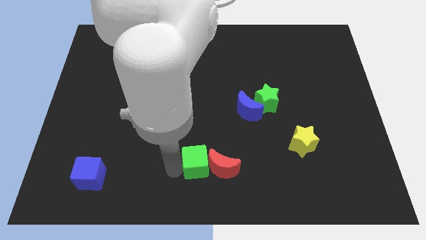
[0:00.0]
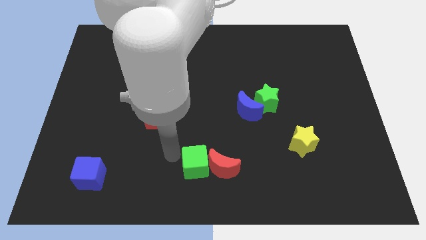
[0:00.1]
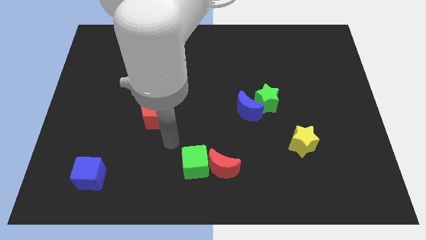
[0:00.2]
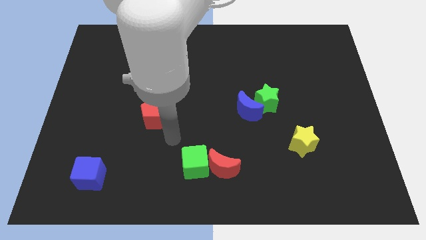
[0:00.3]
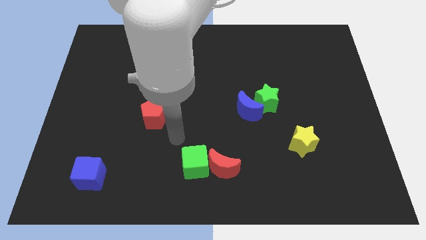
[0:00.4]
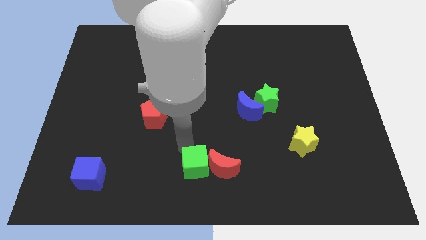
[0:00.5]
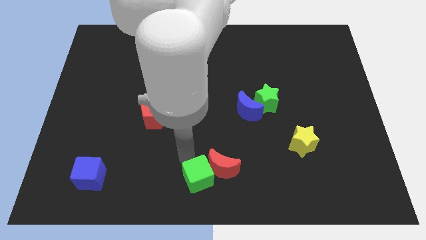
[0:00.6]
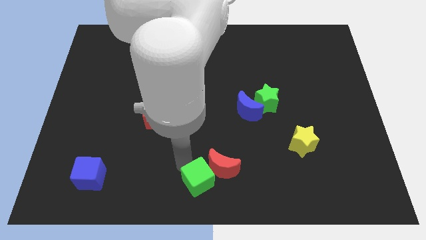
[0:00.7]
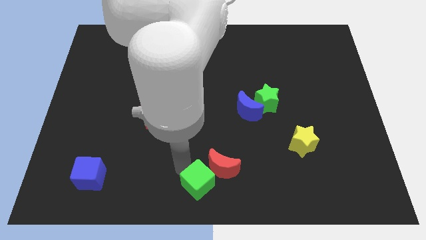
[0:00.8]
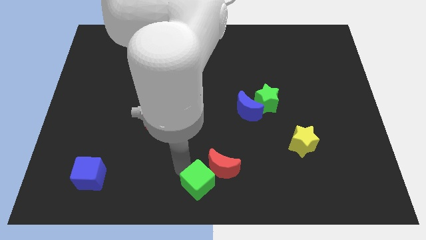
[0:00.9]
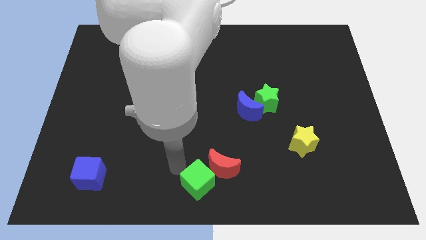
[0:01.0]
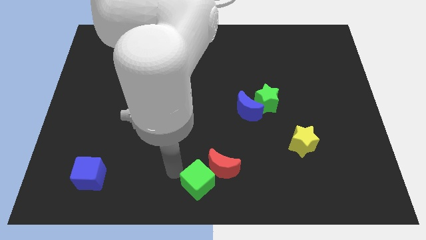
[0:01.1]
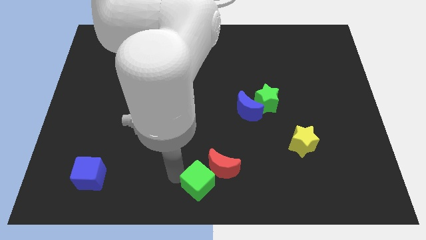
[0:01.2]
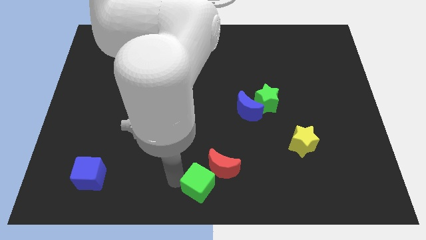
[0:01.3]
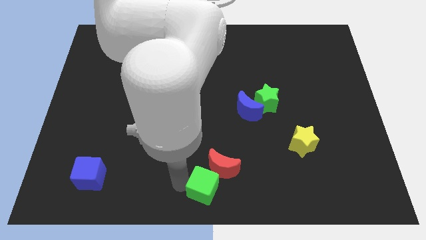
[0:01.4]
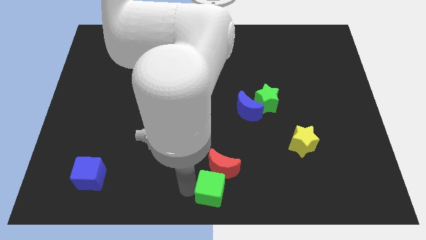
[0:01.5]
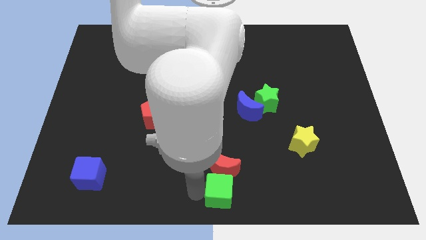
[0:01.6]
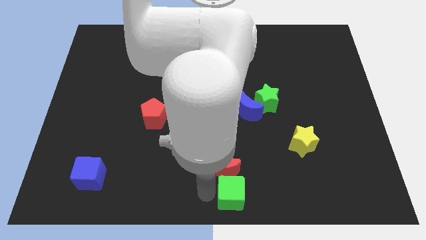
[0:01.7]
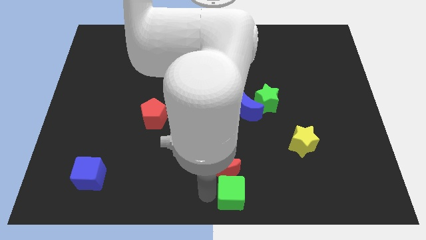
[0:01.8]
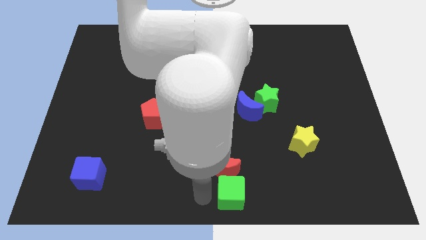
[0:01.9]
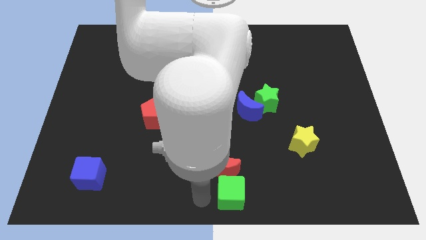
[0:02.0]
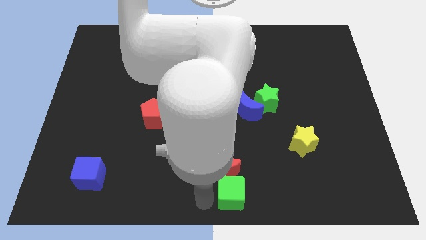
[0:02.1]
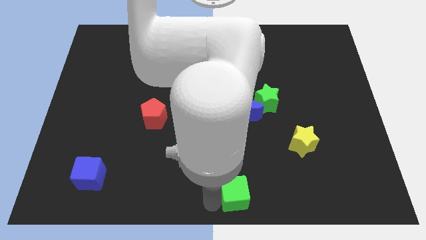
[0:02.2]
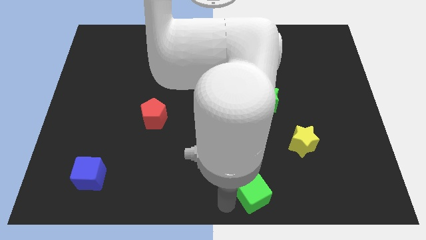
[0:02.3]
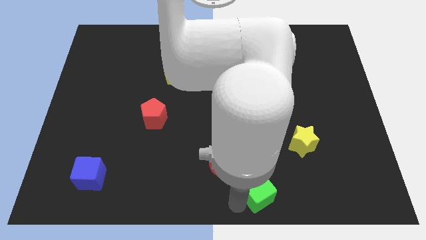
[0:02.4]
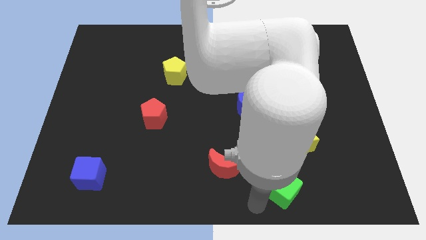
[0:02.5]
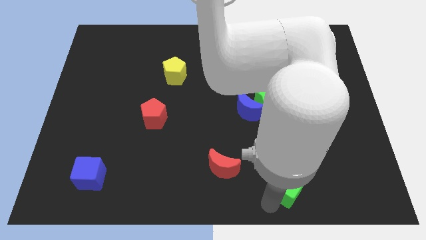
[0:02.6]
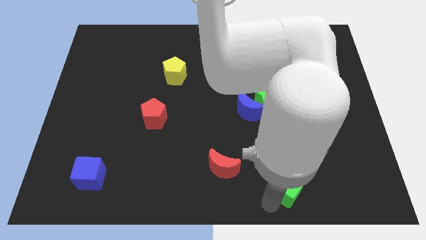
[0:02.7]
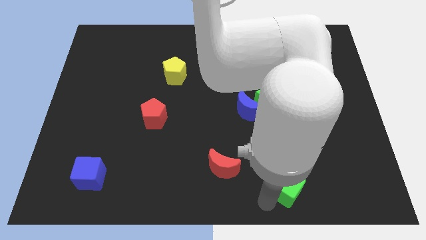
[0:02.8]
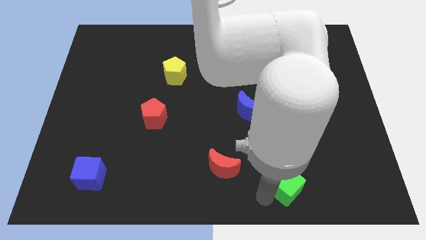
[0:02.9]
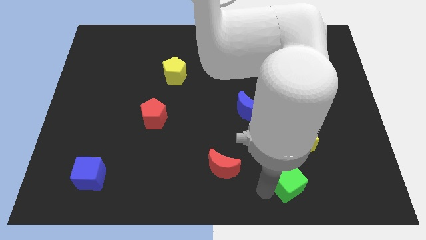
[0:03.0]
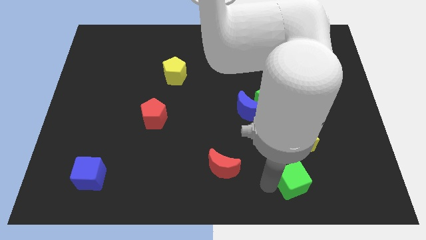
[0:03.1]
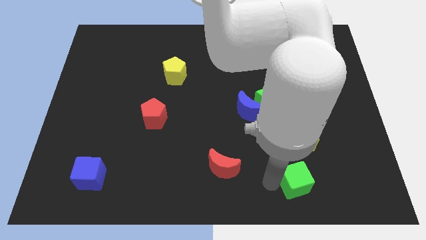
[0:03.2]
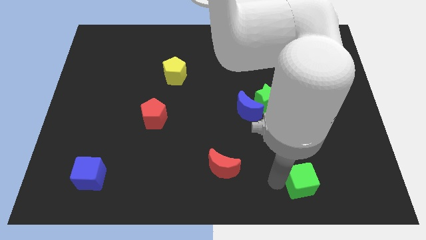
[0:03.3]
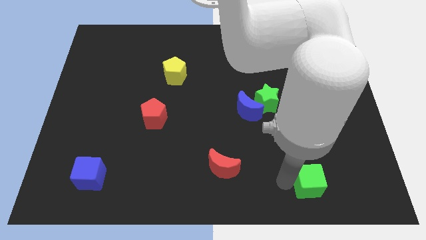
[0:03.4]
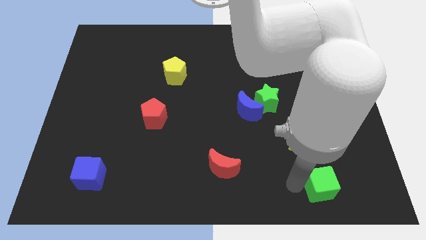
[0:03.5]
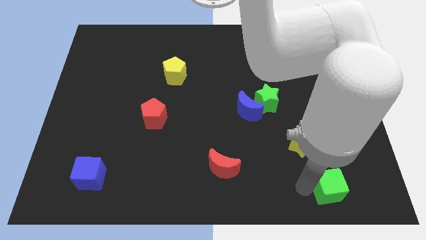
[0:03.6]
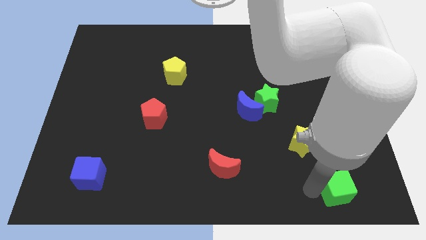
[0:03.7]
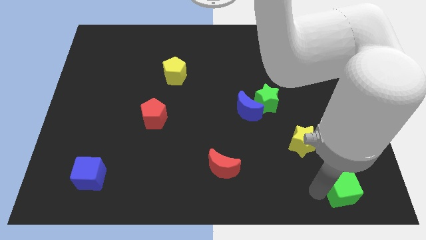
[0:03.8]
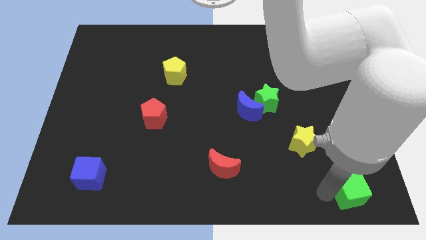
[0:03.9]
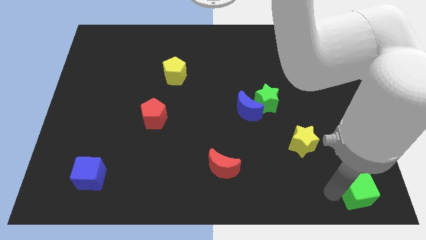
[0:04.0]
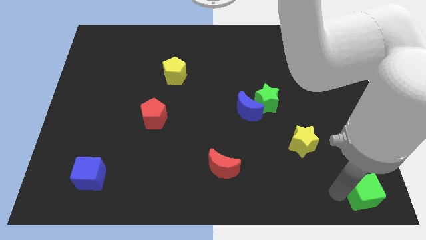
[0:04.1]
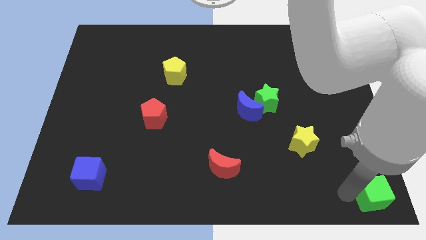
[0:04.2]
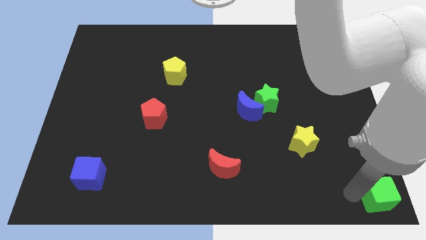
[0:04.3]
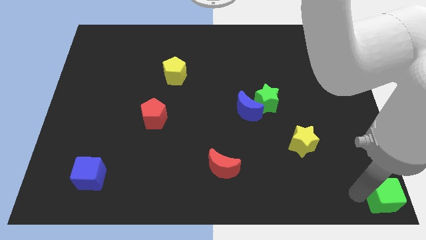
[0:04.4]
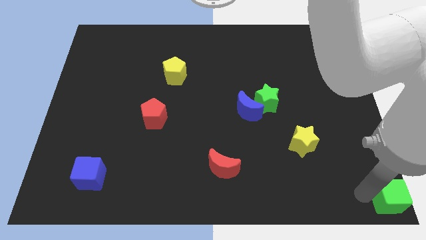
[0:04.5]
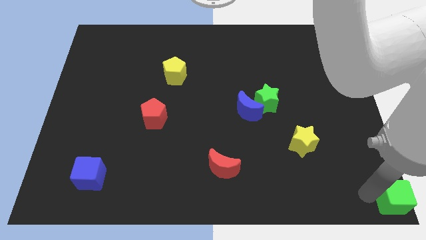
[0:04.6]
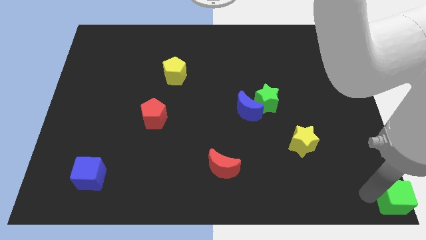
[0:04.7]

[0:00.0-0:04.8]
move green cube towards bottom right side of the board

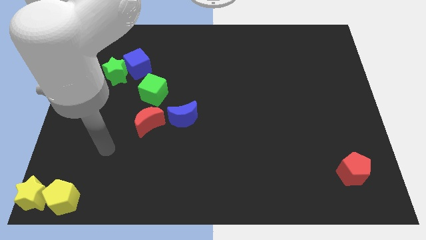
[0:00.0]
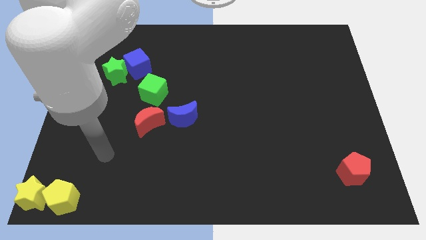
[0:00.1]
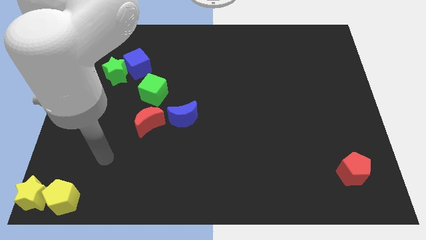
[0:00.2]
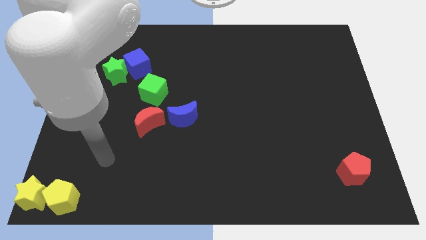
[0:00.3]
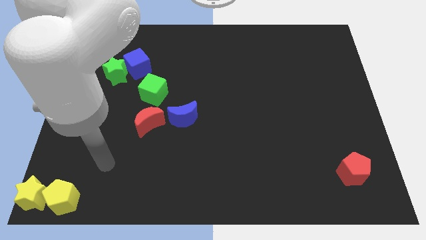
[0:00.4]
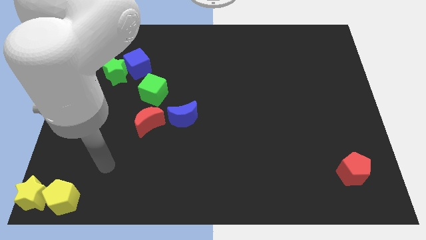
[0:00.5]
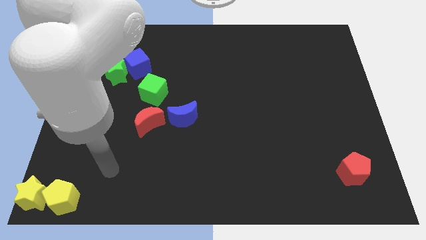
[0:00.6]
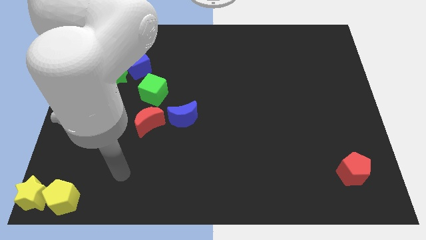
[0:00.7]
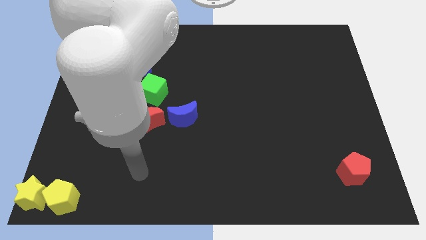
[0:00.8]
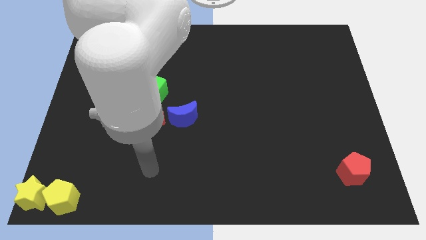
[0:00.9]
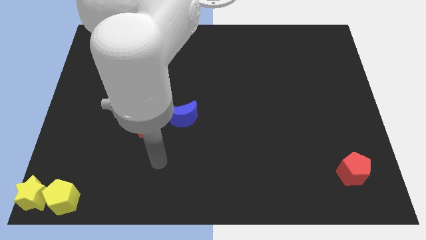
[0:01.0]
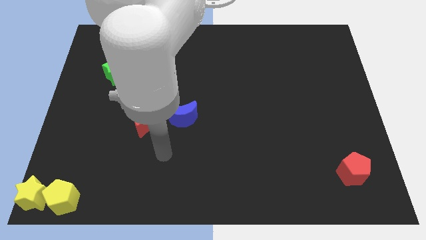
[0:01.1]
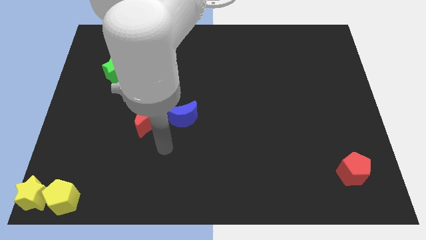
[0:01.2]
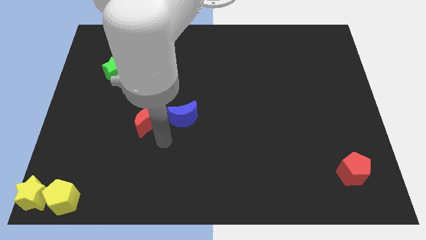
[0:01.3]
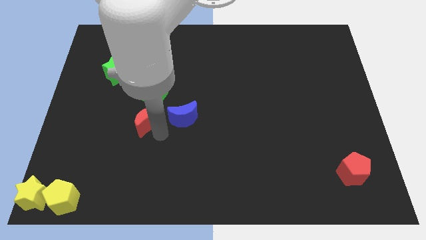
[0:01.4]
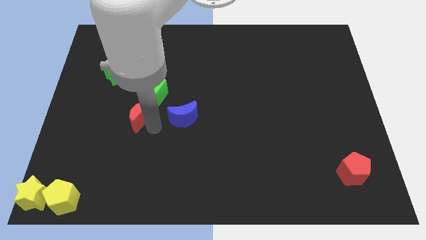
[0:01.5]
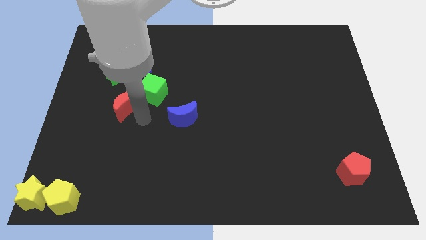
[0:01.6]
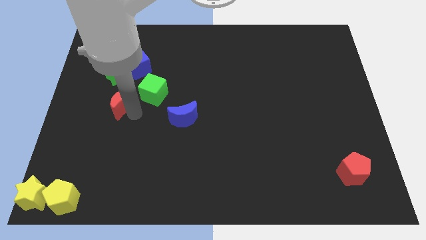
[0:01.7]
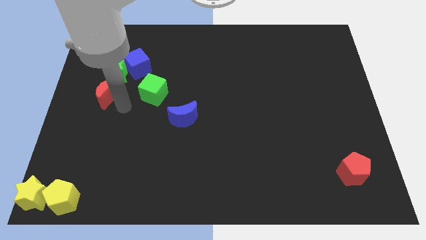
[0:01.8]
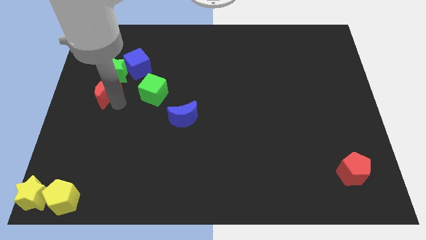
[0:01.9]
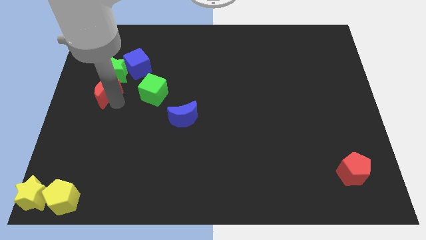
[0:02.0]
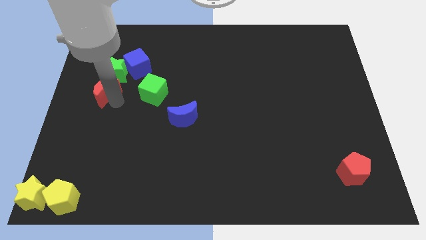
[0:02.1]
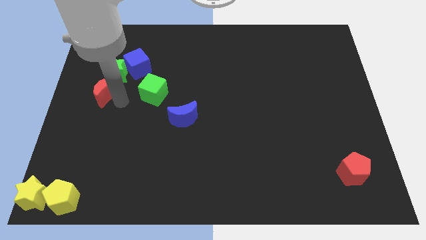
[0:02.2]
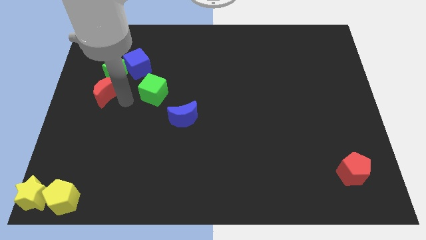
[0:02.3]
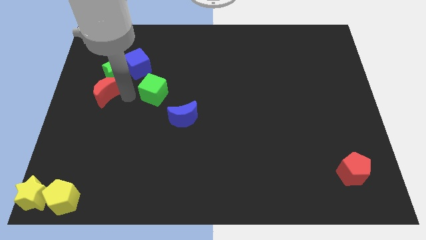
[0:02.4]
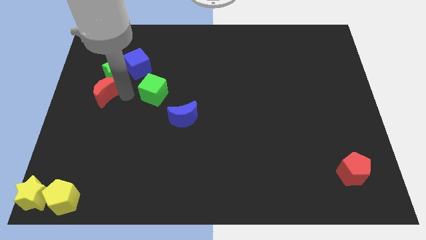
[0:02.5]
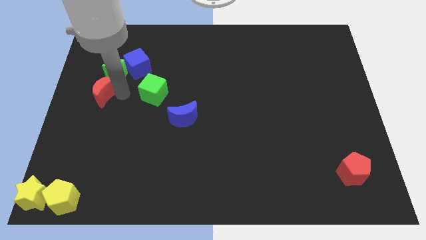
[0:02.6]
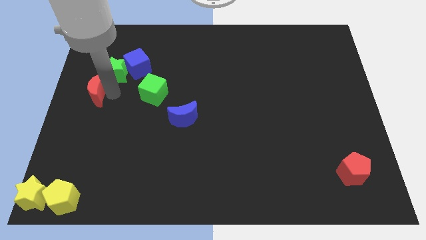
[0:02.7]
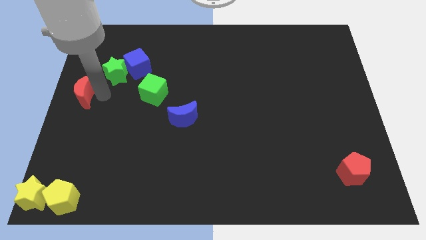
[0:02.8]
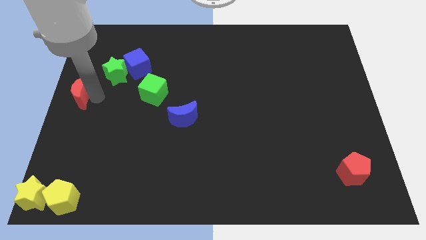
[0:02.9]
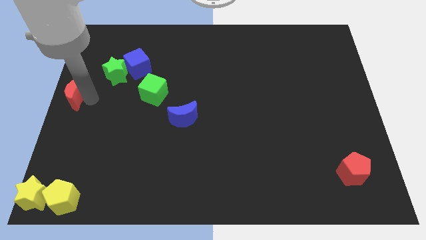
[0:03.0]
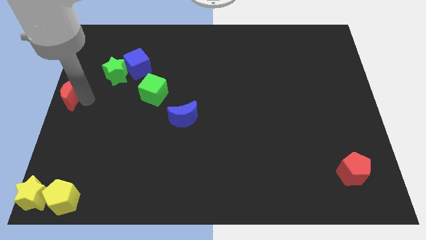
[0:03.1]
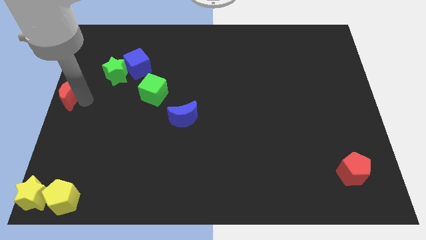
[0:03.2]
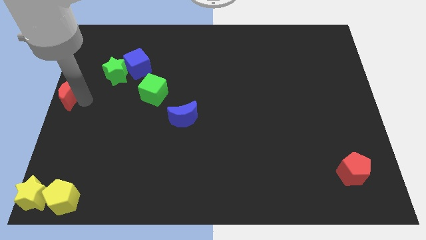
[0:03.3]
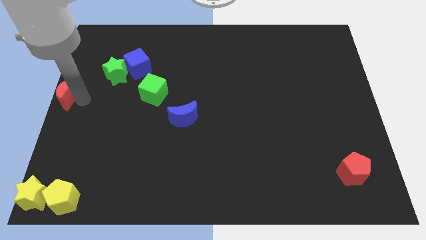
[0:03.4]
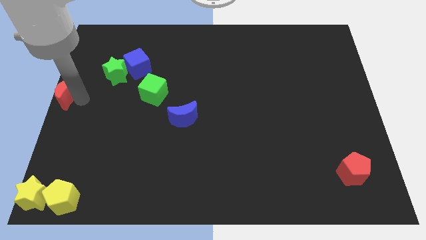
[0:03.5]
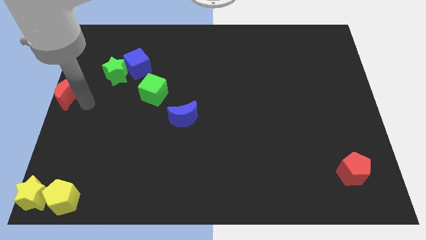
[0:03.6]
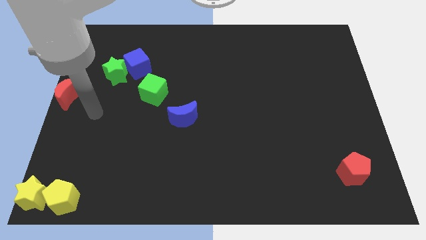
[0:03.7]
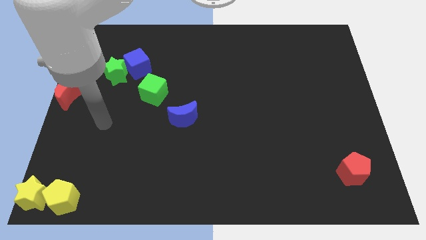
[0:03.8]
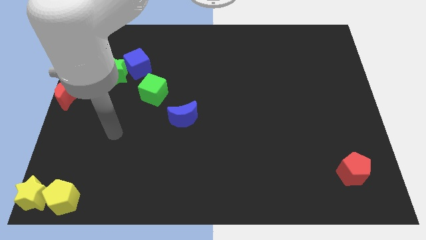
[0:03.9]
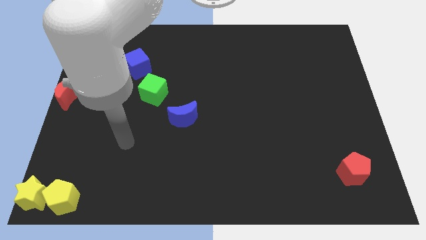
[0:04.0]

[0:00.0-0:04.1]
push the red moon to the left center left of the board

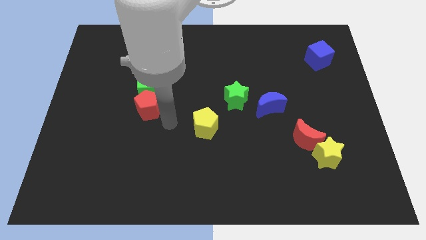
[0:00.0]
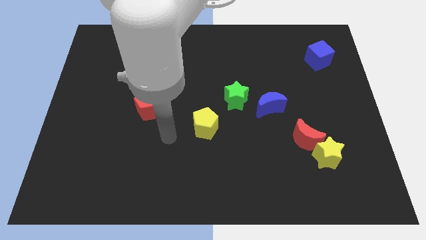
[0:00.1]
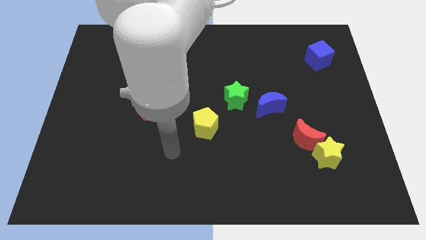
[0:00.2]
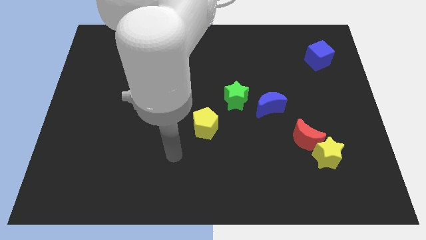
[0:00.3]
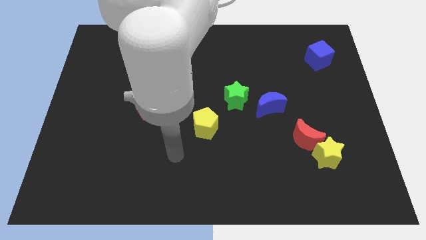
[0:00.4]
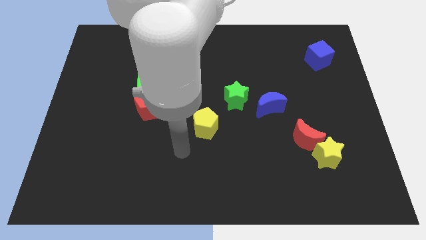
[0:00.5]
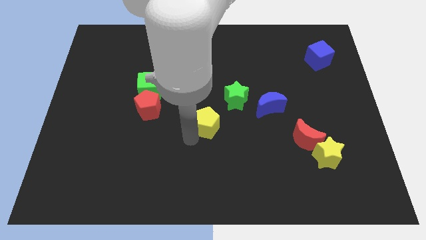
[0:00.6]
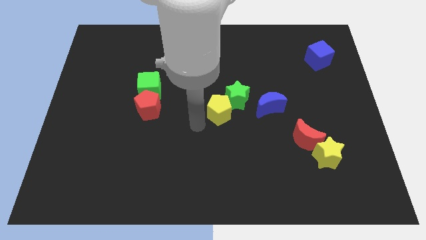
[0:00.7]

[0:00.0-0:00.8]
move away from the red pentagon
